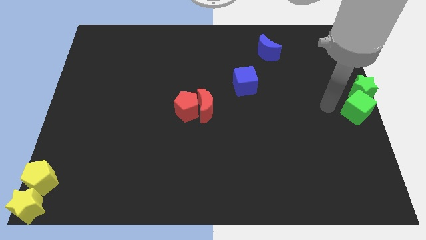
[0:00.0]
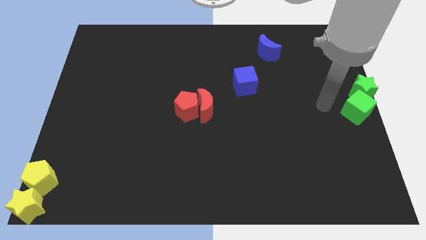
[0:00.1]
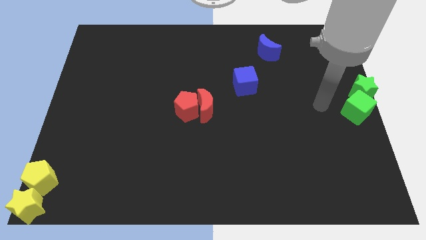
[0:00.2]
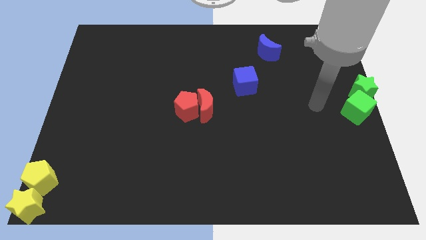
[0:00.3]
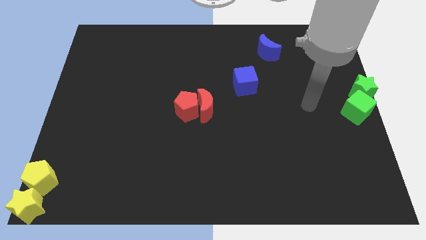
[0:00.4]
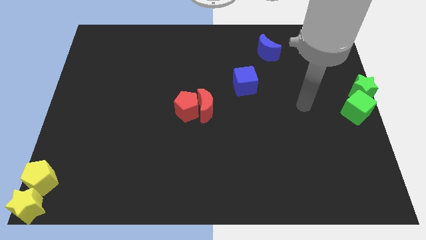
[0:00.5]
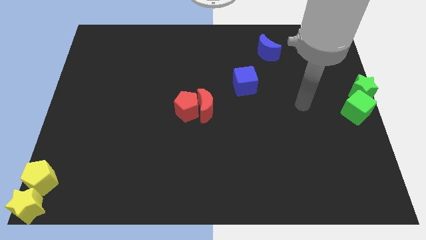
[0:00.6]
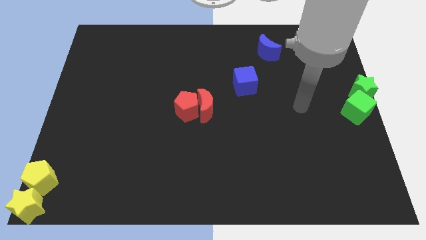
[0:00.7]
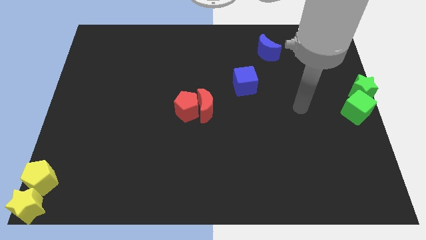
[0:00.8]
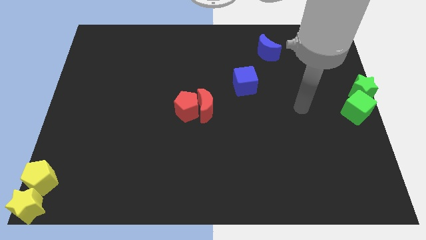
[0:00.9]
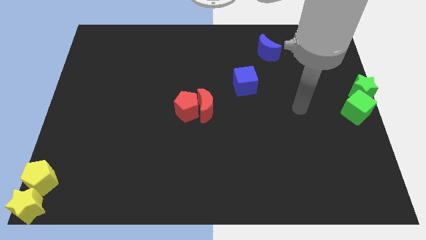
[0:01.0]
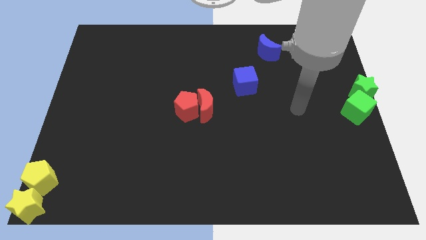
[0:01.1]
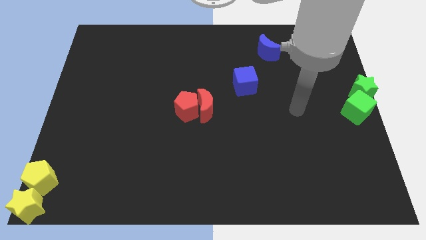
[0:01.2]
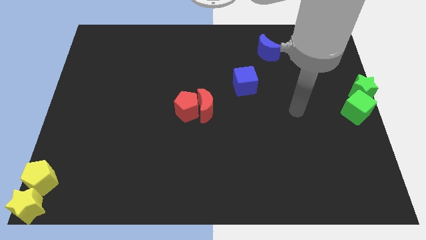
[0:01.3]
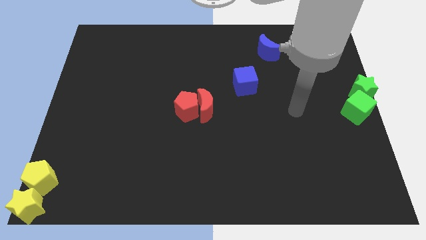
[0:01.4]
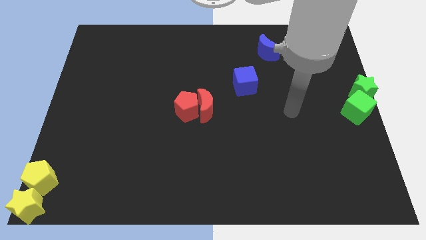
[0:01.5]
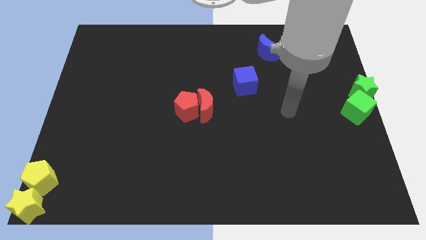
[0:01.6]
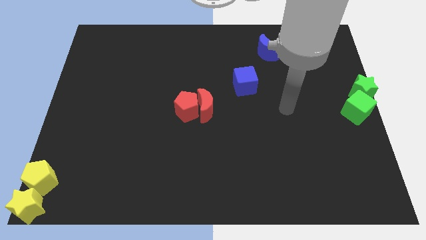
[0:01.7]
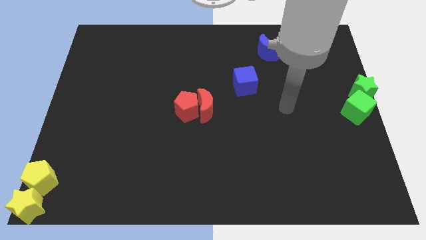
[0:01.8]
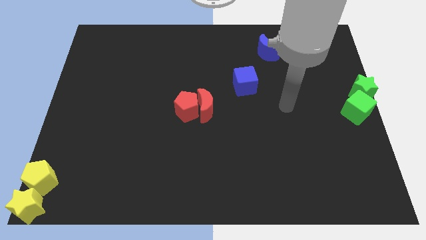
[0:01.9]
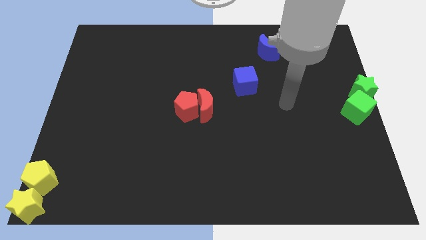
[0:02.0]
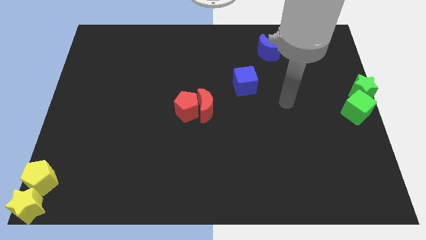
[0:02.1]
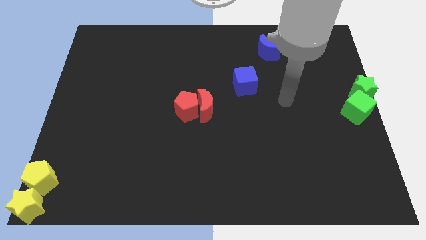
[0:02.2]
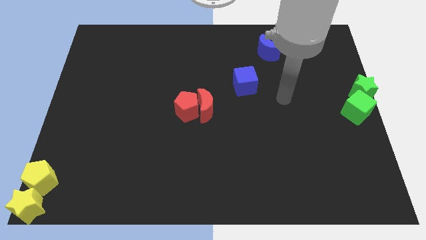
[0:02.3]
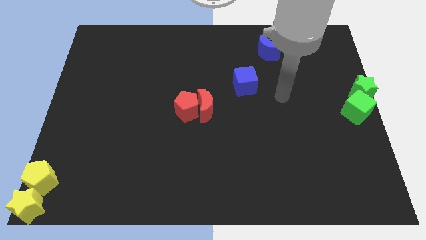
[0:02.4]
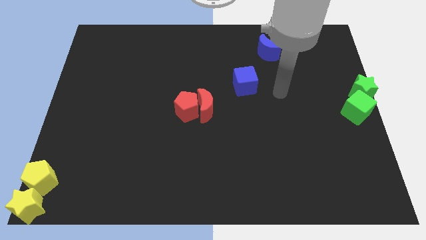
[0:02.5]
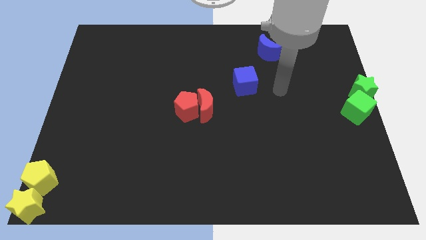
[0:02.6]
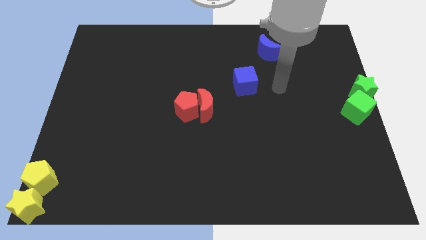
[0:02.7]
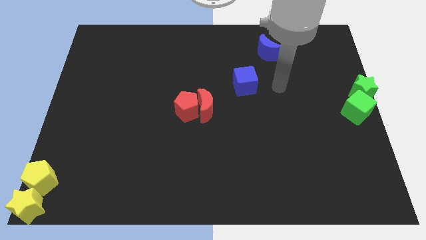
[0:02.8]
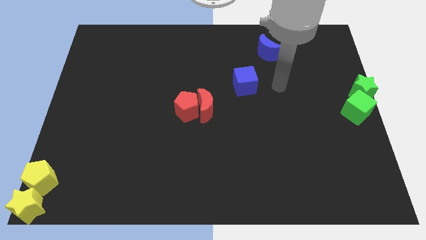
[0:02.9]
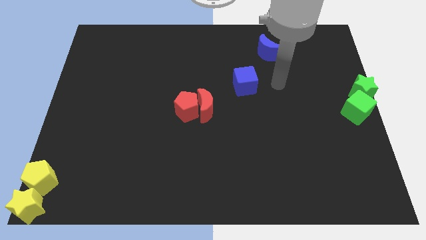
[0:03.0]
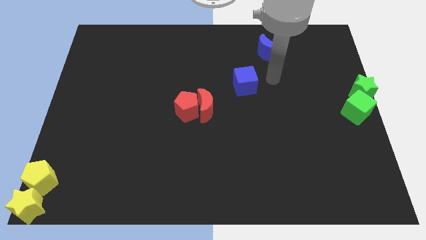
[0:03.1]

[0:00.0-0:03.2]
point the arm to the right of the blue cube

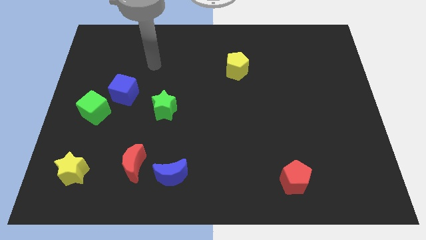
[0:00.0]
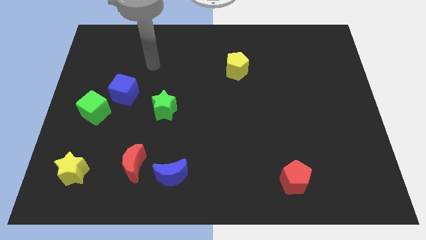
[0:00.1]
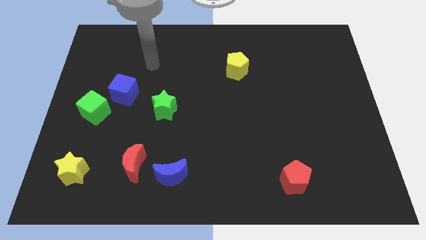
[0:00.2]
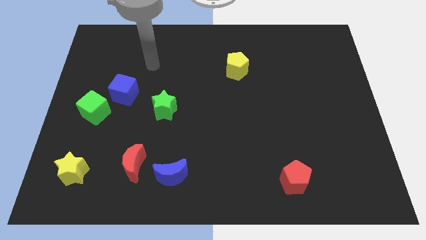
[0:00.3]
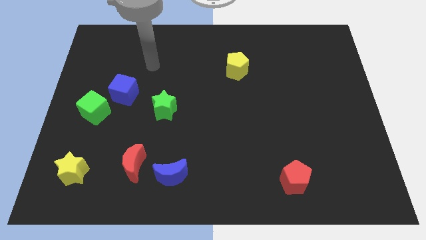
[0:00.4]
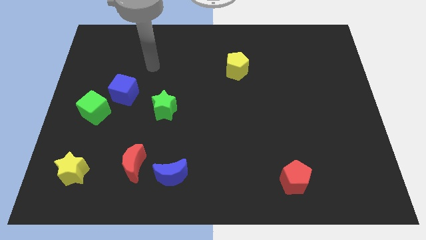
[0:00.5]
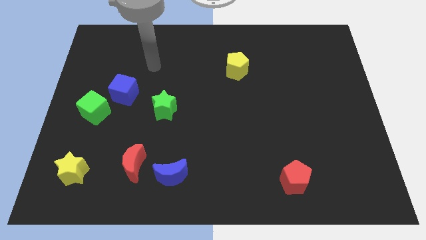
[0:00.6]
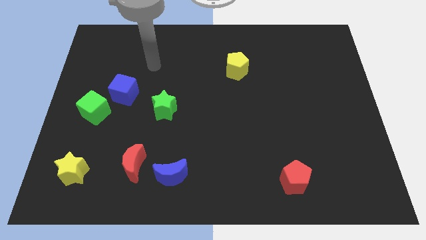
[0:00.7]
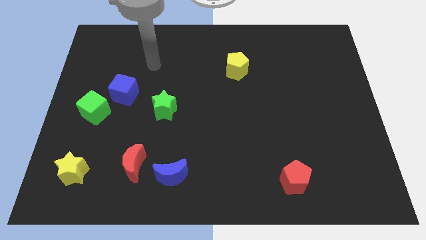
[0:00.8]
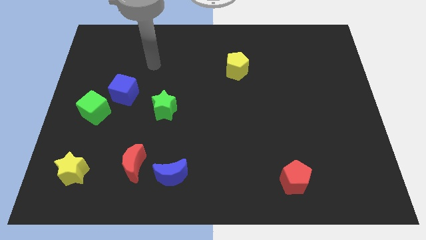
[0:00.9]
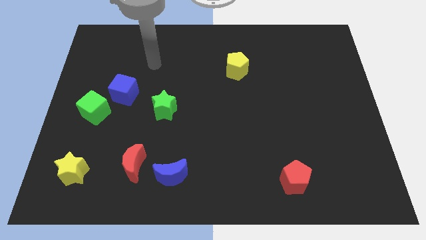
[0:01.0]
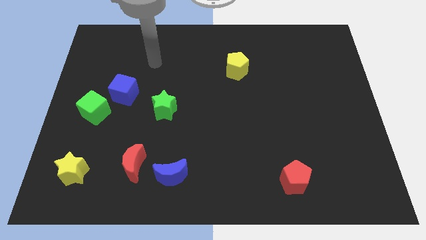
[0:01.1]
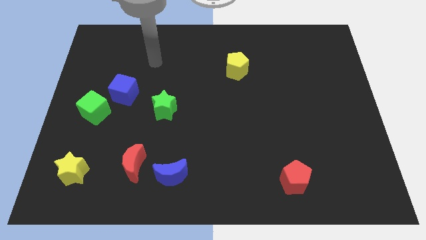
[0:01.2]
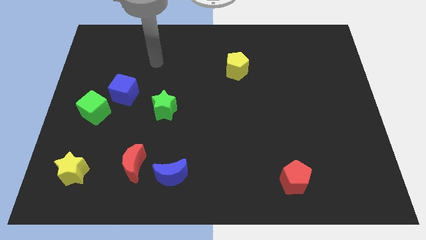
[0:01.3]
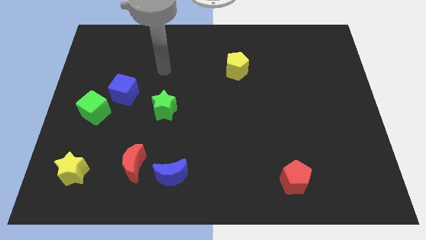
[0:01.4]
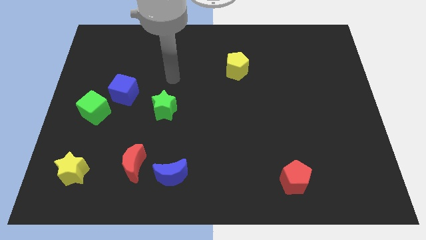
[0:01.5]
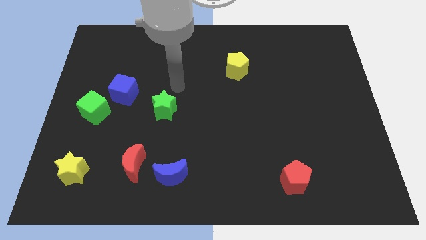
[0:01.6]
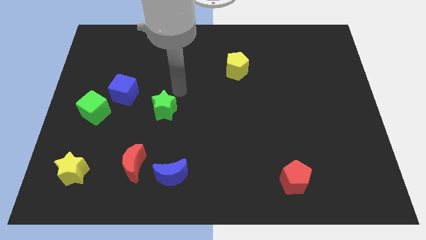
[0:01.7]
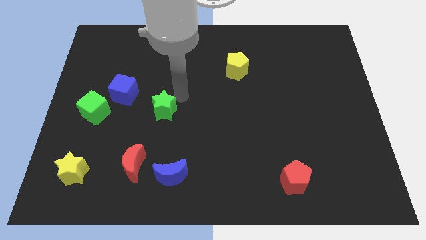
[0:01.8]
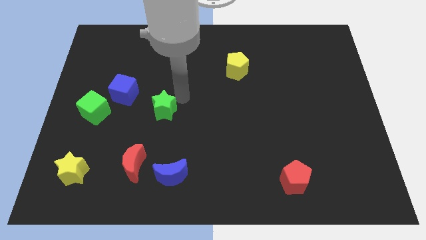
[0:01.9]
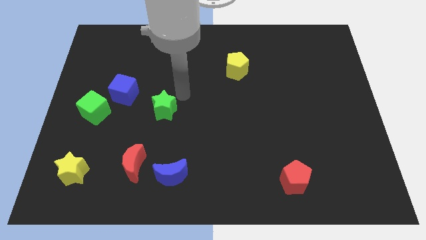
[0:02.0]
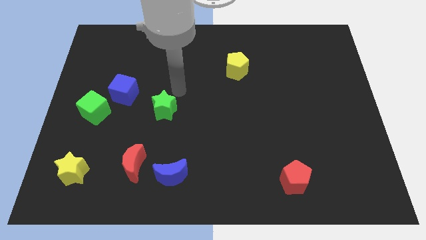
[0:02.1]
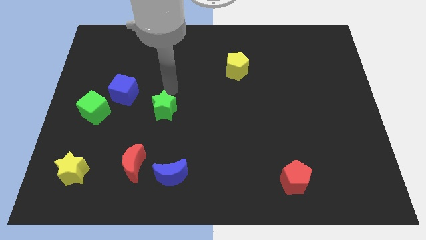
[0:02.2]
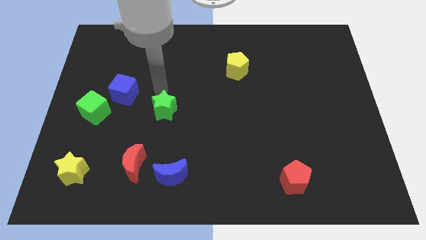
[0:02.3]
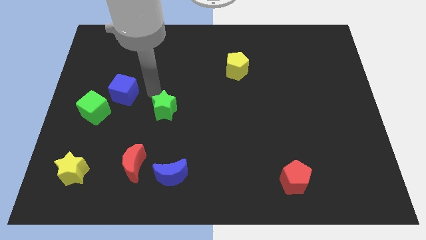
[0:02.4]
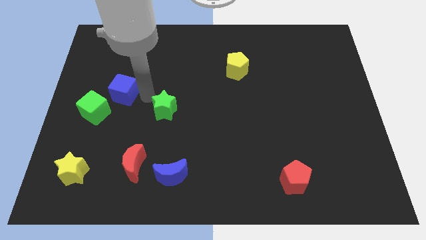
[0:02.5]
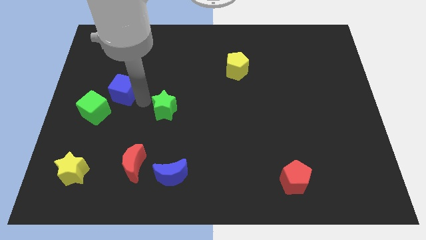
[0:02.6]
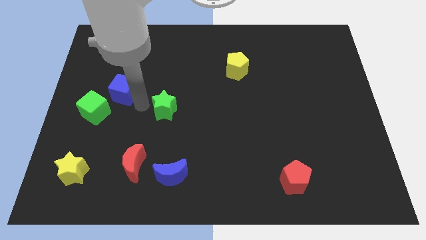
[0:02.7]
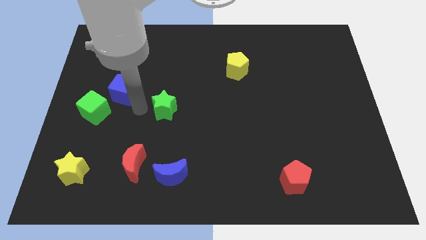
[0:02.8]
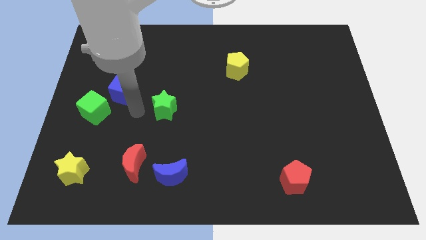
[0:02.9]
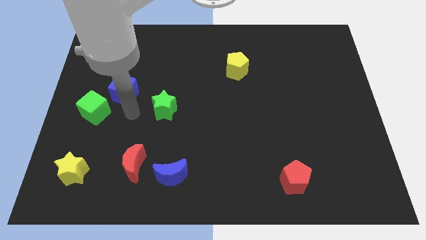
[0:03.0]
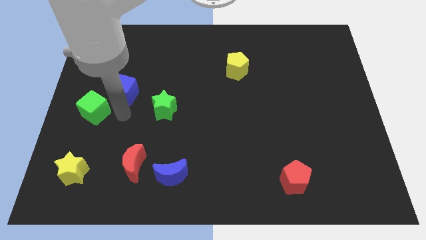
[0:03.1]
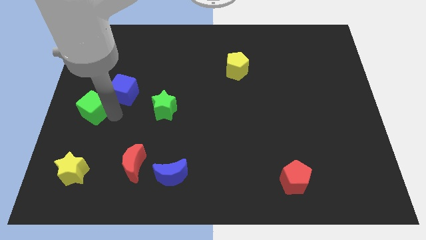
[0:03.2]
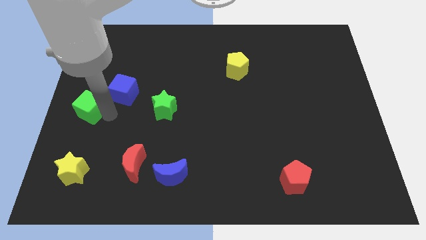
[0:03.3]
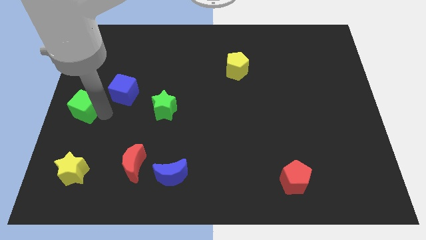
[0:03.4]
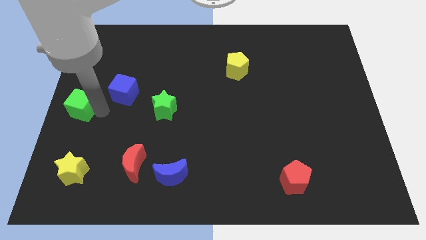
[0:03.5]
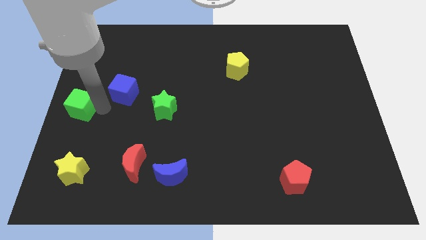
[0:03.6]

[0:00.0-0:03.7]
slightly push the green cube to the left of the board

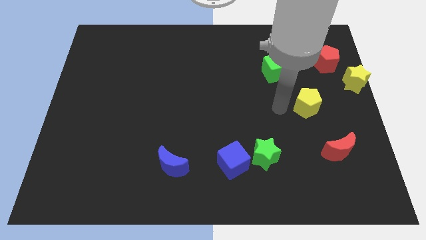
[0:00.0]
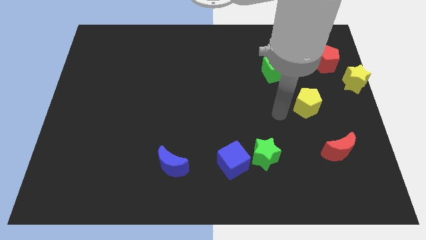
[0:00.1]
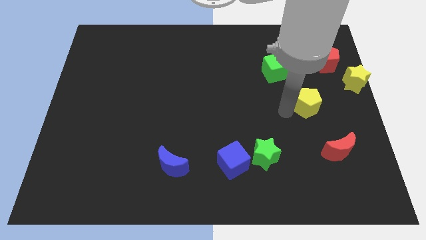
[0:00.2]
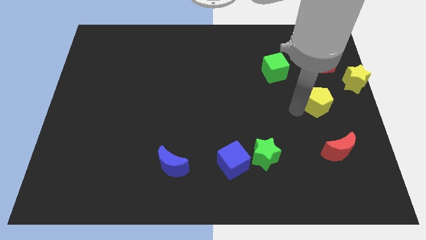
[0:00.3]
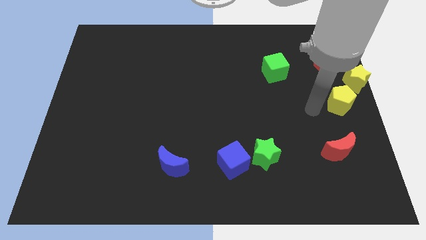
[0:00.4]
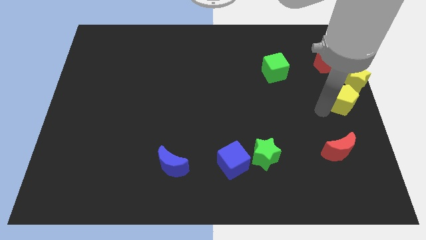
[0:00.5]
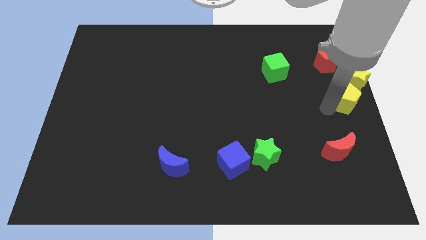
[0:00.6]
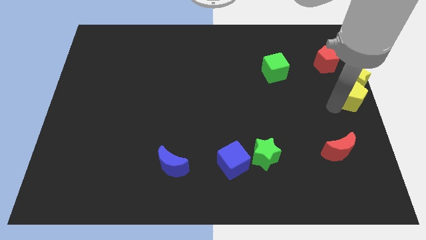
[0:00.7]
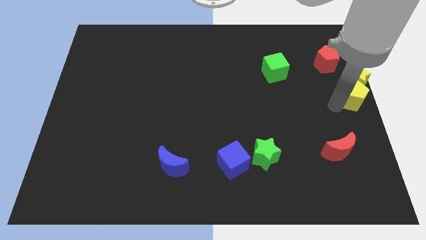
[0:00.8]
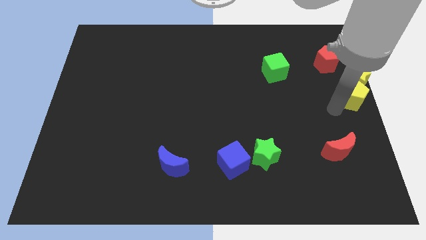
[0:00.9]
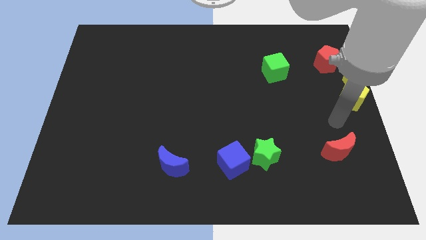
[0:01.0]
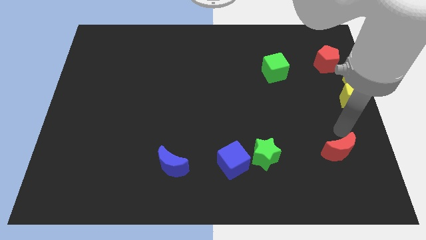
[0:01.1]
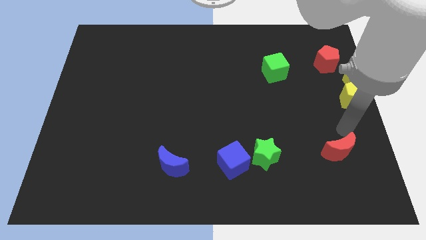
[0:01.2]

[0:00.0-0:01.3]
move the yellow pentagon below the yellow star

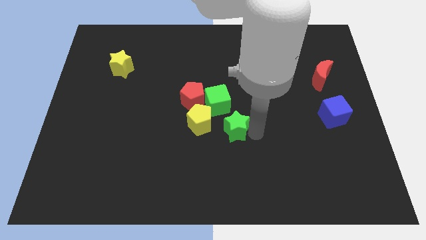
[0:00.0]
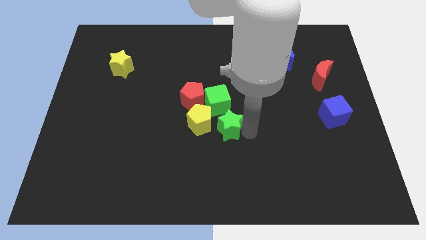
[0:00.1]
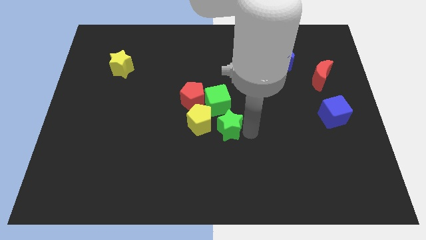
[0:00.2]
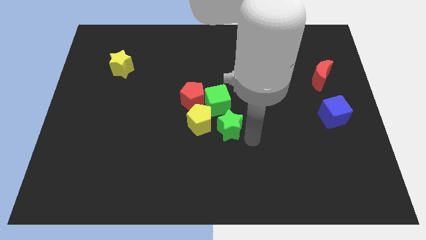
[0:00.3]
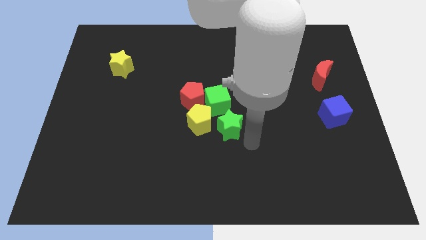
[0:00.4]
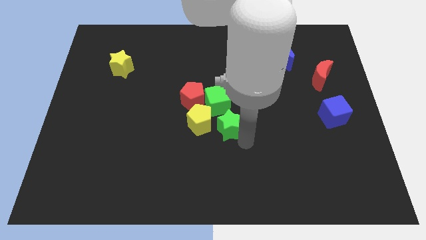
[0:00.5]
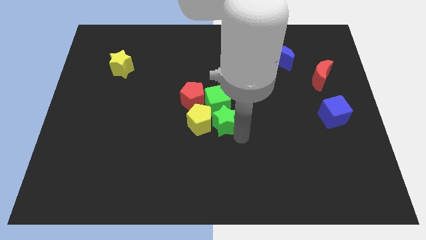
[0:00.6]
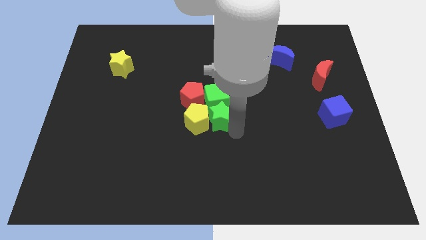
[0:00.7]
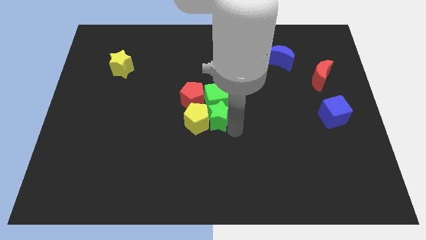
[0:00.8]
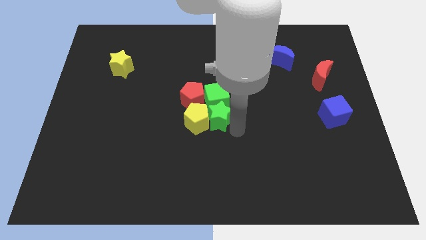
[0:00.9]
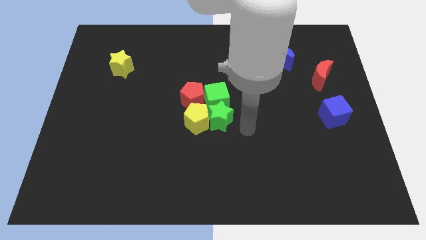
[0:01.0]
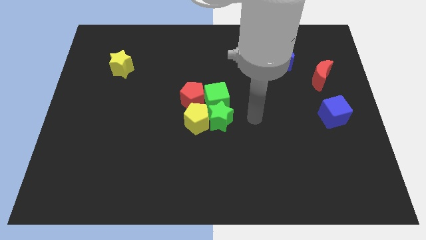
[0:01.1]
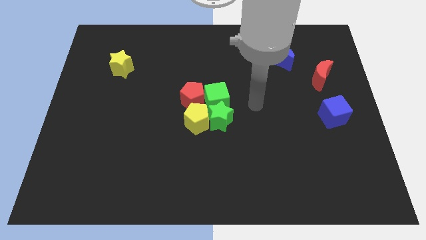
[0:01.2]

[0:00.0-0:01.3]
push the green star into the group of blocks
